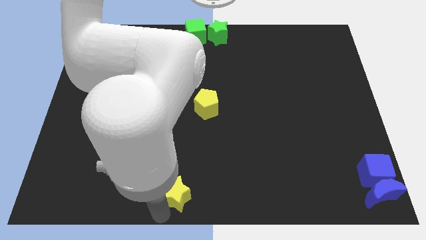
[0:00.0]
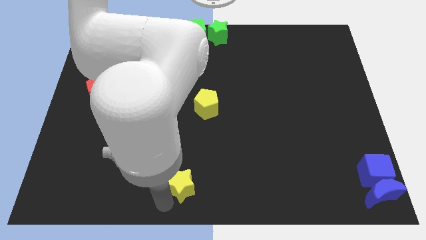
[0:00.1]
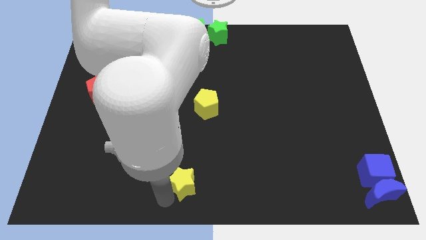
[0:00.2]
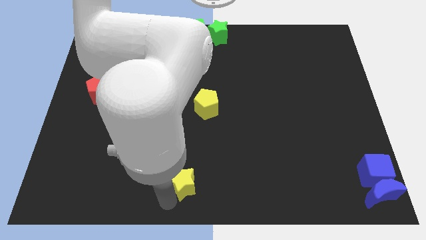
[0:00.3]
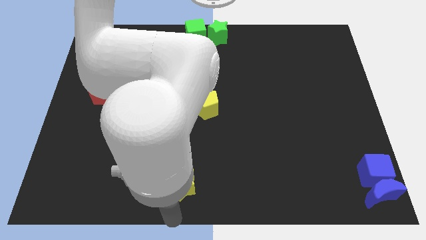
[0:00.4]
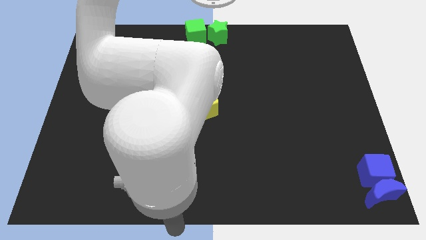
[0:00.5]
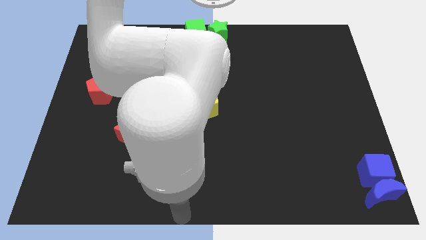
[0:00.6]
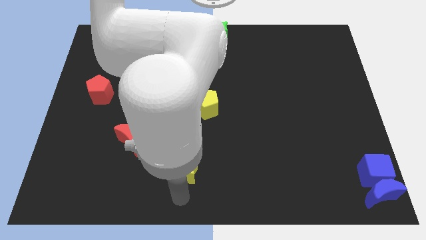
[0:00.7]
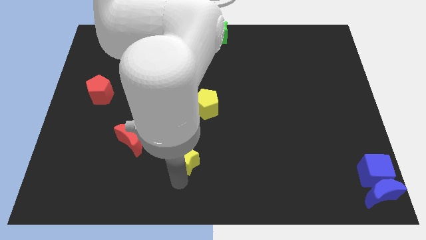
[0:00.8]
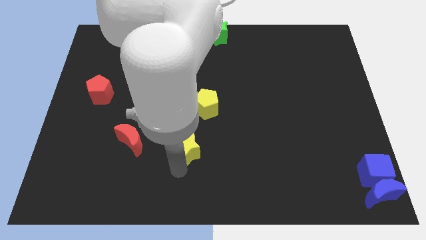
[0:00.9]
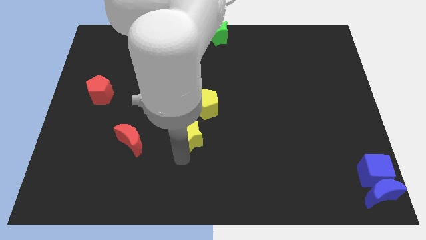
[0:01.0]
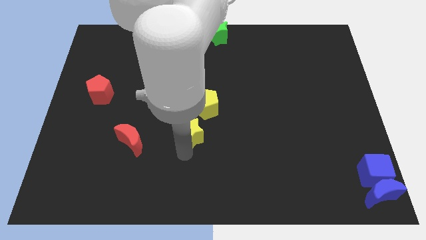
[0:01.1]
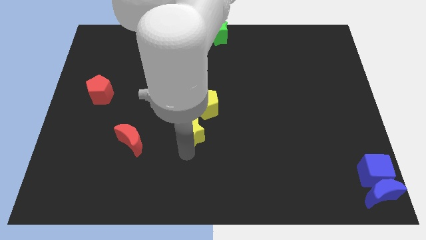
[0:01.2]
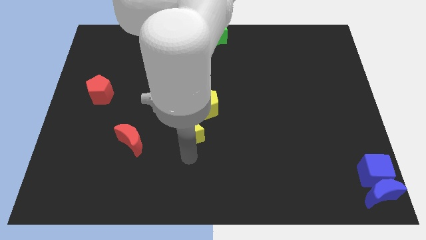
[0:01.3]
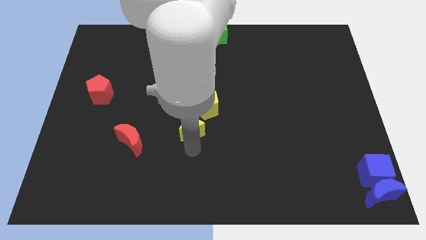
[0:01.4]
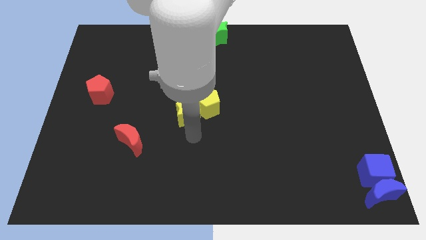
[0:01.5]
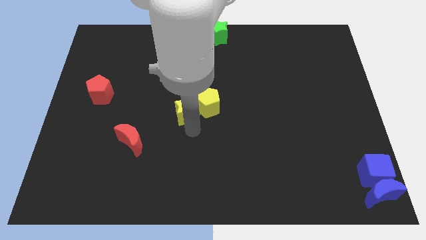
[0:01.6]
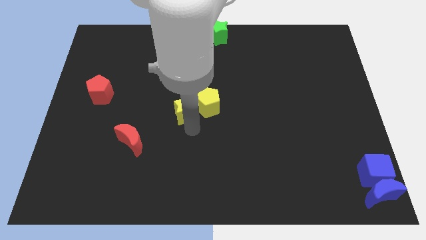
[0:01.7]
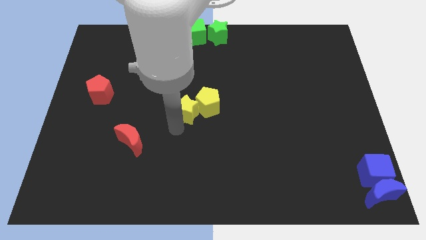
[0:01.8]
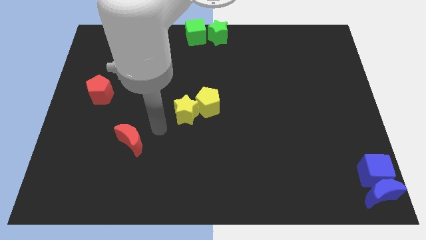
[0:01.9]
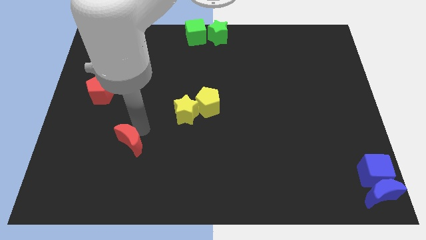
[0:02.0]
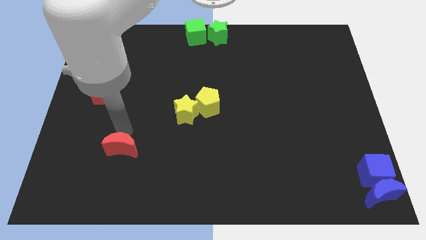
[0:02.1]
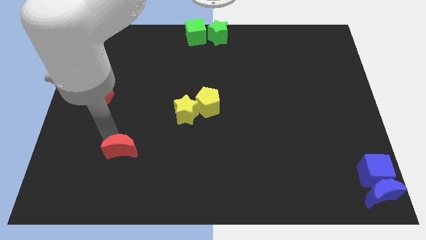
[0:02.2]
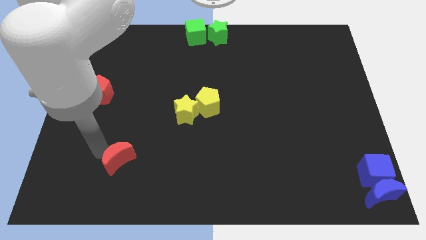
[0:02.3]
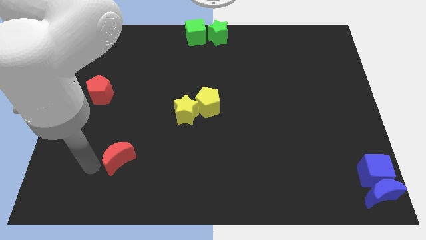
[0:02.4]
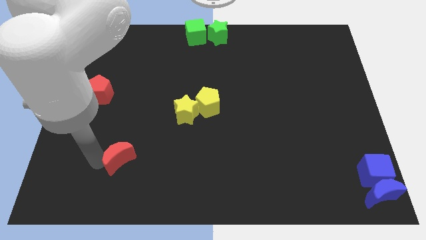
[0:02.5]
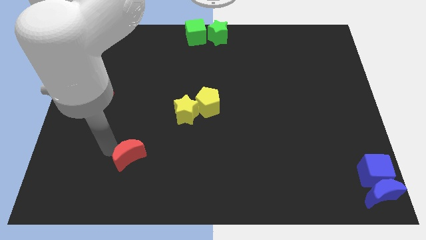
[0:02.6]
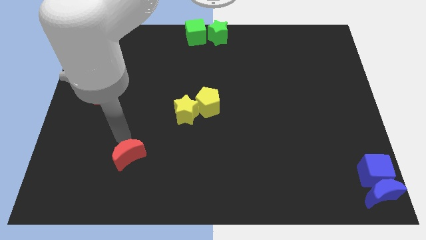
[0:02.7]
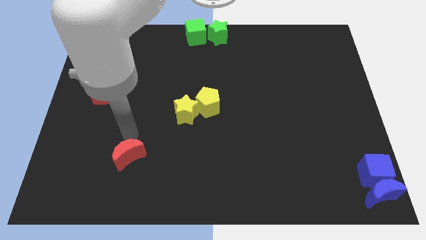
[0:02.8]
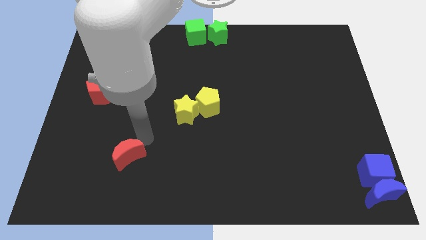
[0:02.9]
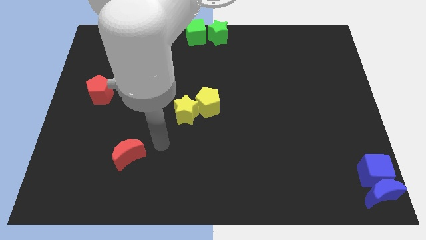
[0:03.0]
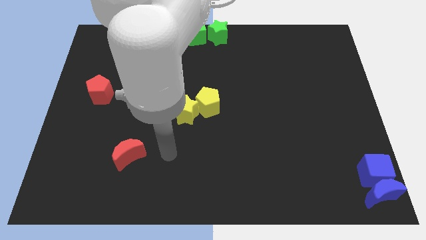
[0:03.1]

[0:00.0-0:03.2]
push the yellow star into the yellow pentagon

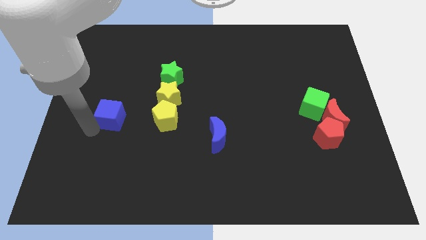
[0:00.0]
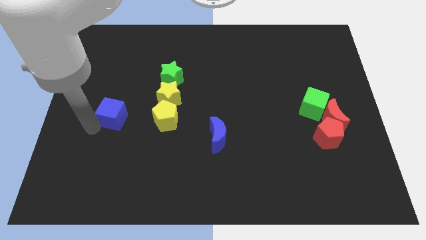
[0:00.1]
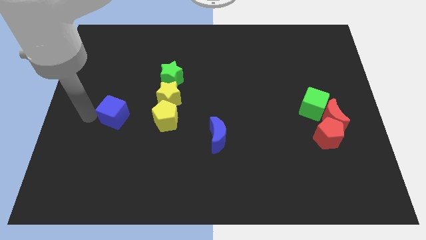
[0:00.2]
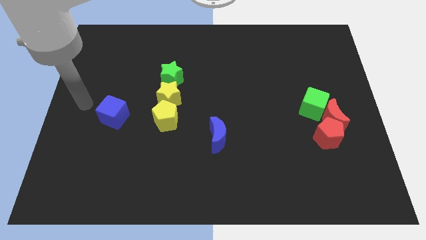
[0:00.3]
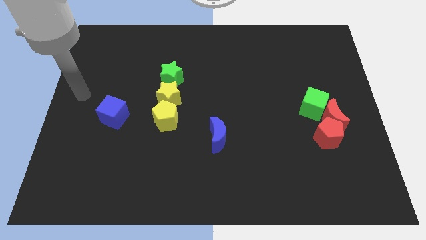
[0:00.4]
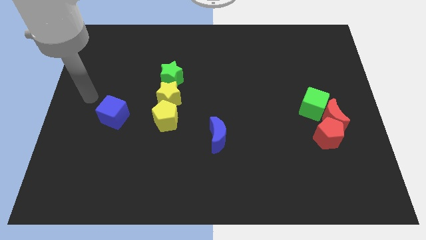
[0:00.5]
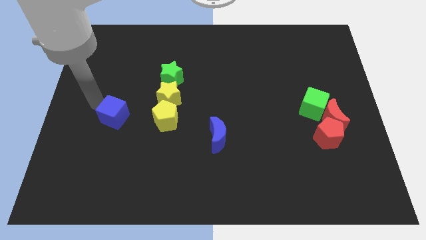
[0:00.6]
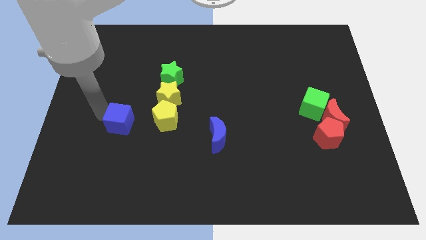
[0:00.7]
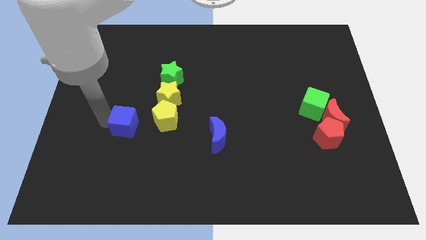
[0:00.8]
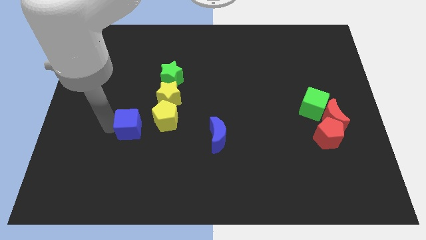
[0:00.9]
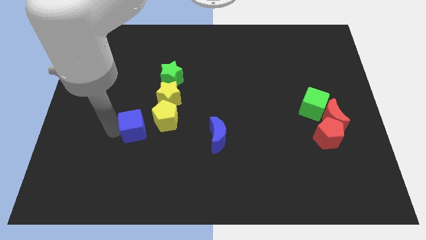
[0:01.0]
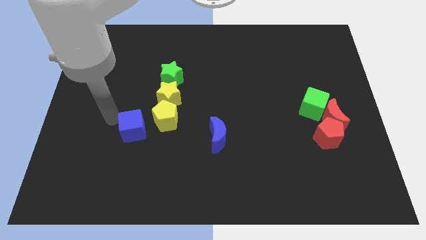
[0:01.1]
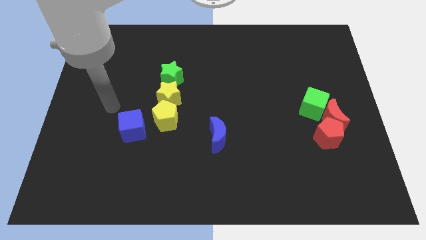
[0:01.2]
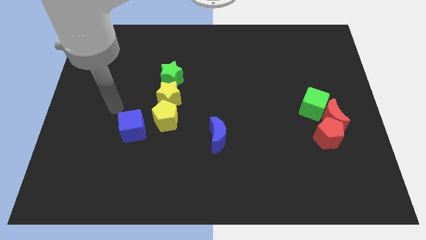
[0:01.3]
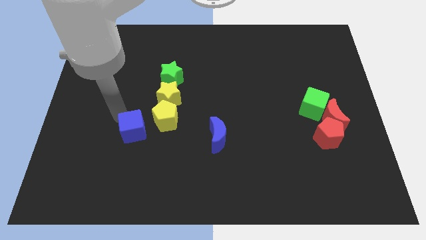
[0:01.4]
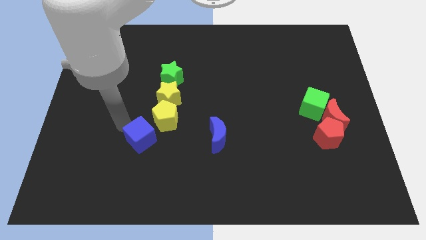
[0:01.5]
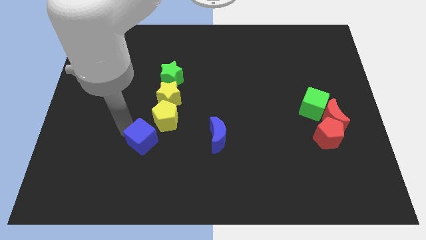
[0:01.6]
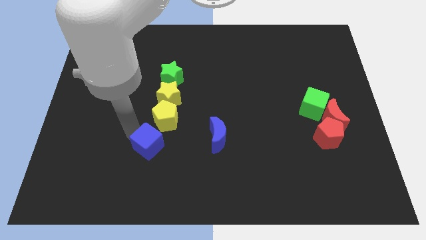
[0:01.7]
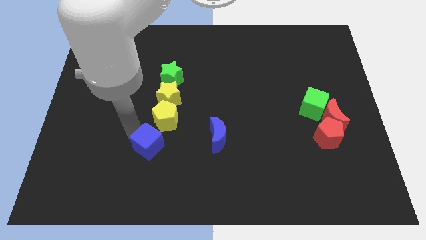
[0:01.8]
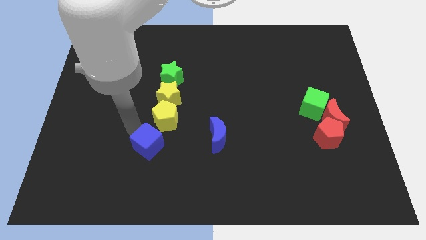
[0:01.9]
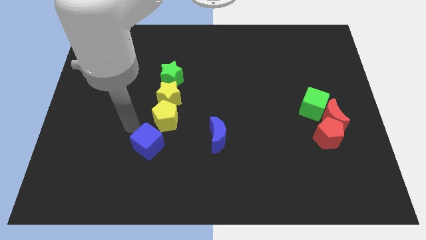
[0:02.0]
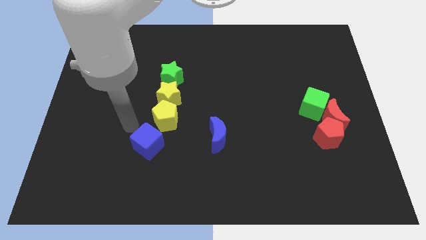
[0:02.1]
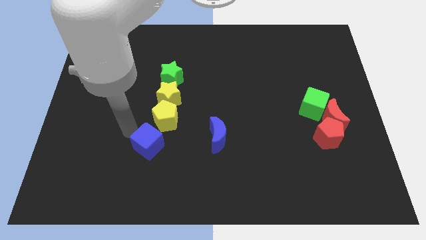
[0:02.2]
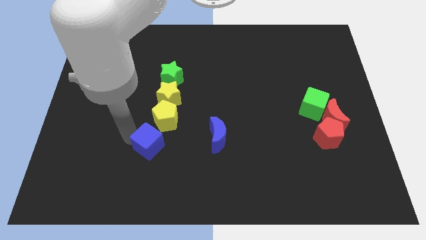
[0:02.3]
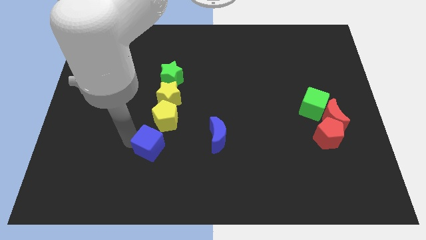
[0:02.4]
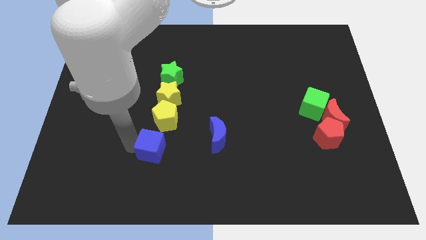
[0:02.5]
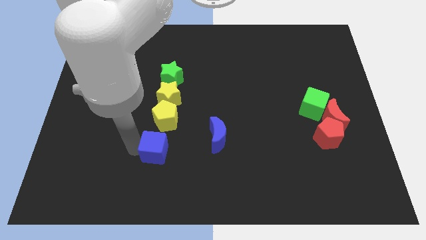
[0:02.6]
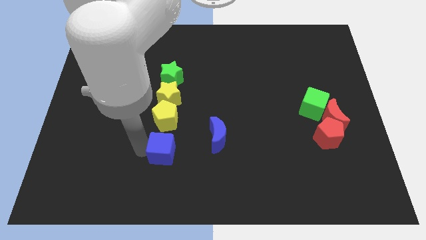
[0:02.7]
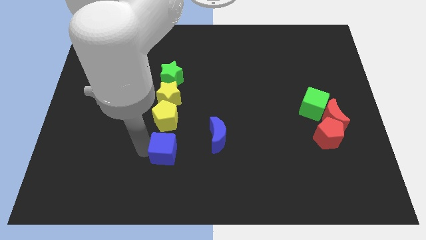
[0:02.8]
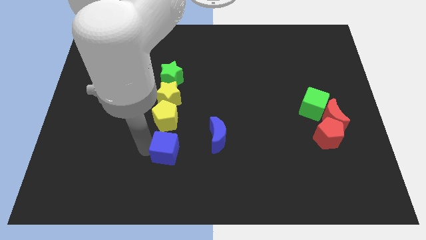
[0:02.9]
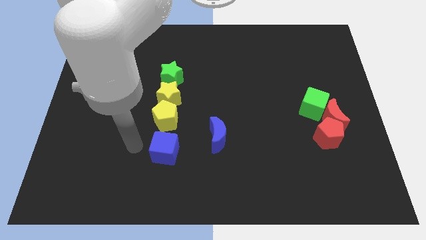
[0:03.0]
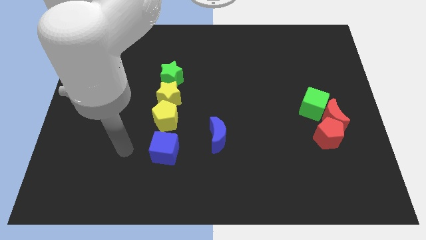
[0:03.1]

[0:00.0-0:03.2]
place the blue cube down to the yellow pentagon

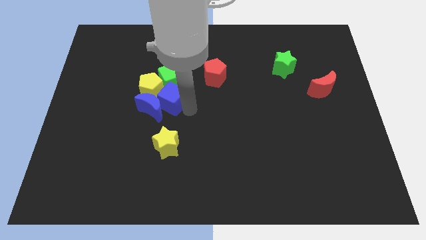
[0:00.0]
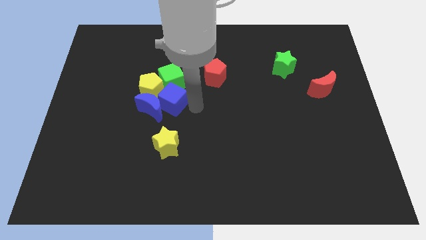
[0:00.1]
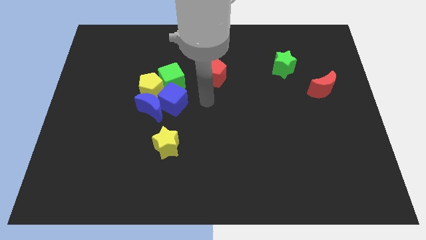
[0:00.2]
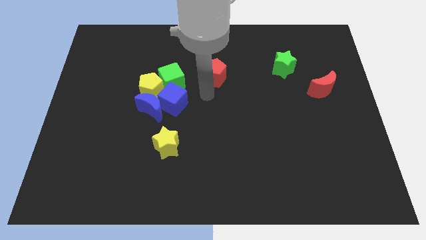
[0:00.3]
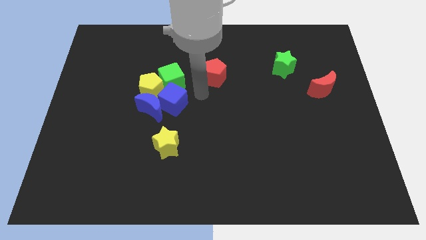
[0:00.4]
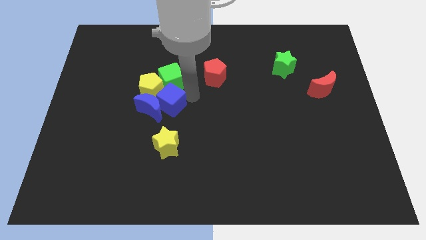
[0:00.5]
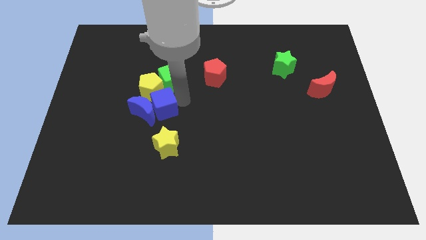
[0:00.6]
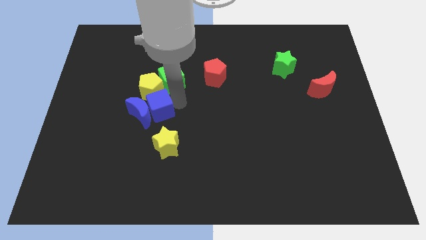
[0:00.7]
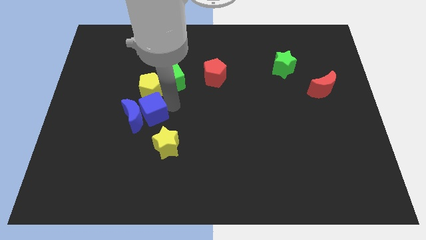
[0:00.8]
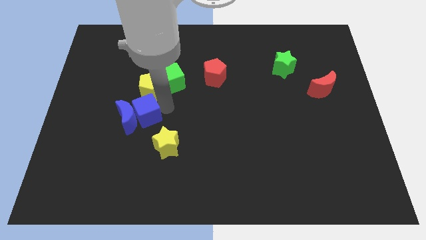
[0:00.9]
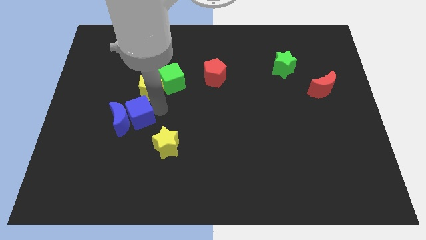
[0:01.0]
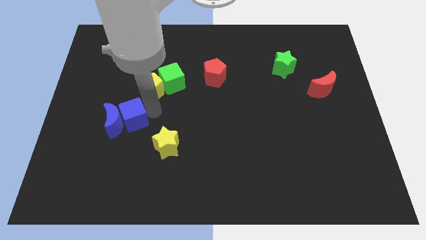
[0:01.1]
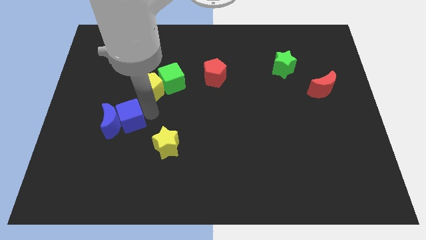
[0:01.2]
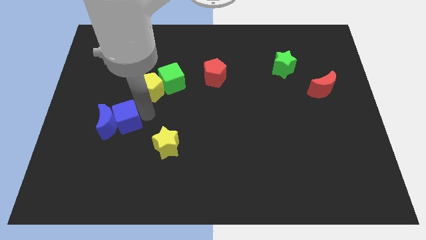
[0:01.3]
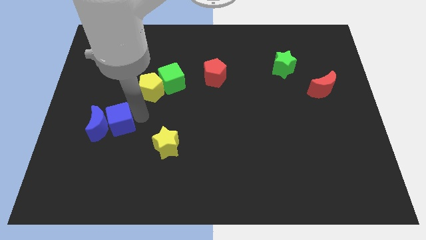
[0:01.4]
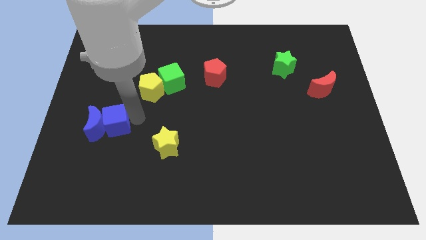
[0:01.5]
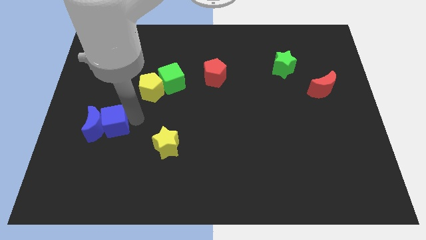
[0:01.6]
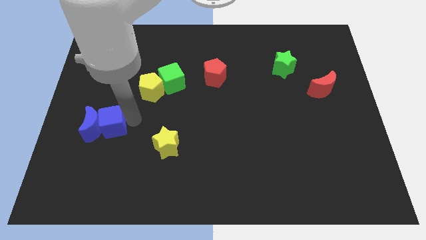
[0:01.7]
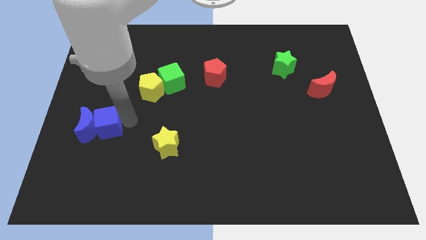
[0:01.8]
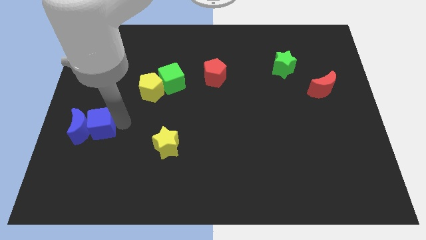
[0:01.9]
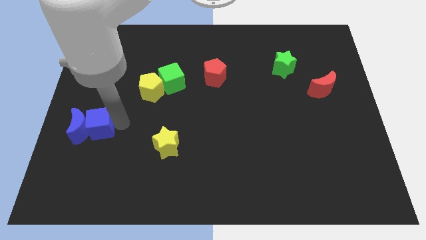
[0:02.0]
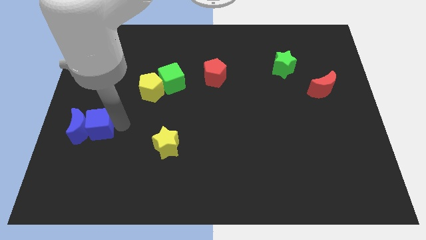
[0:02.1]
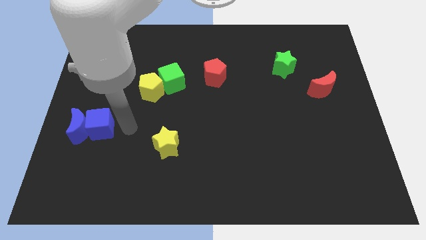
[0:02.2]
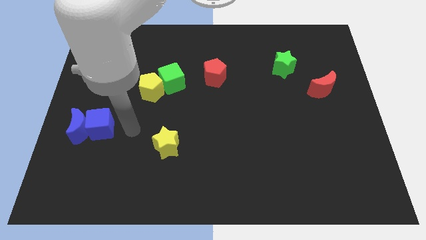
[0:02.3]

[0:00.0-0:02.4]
move blue cubes slightly left
